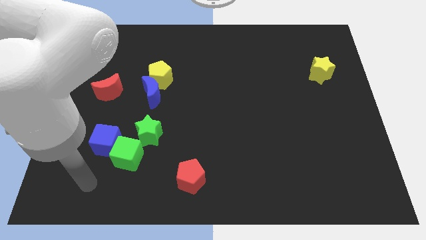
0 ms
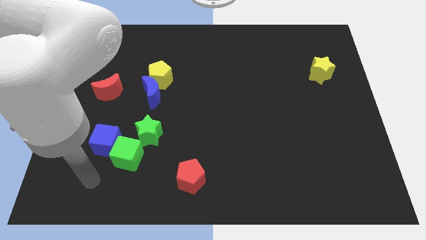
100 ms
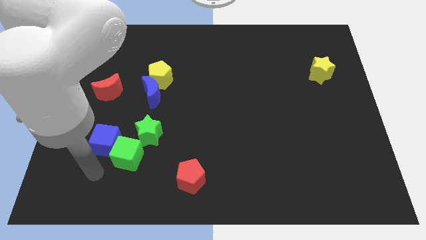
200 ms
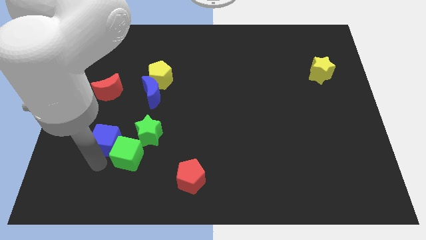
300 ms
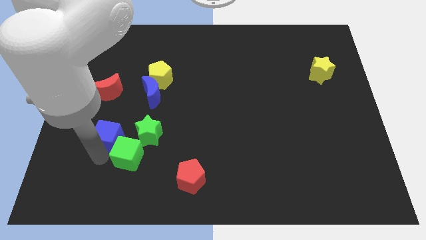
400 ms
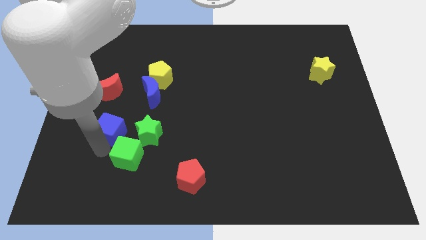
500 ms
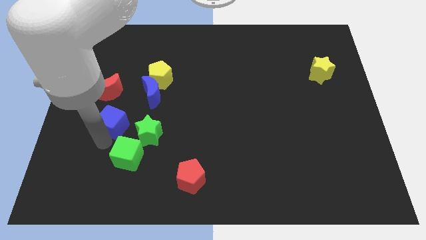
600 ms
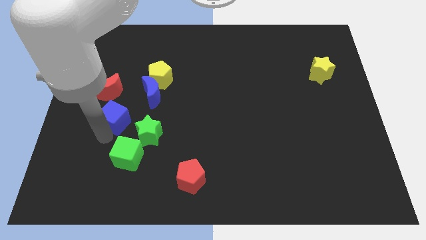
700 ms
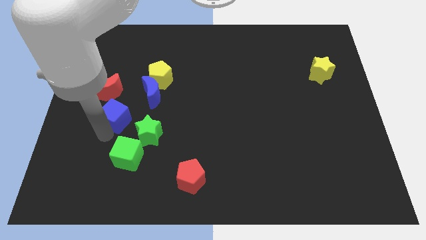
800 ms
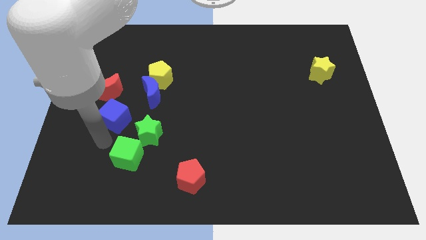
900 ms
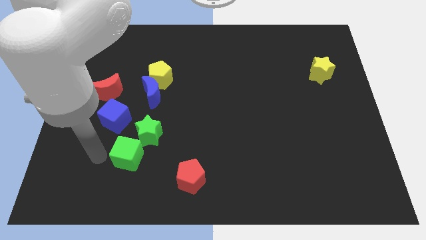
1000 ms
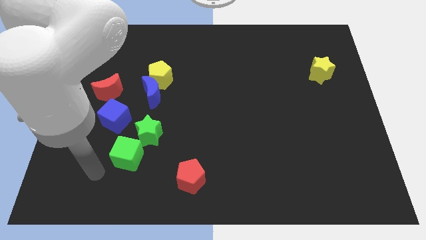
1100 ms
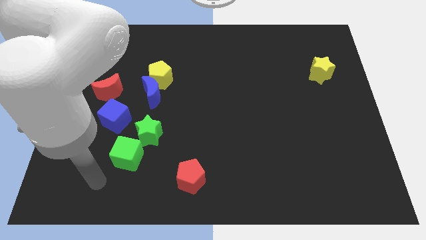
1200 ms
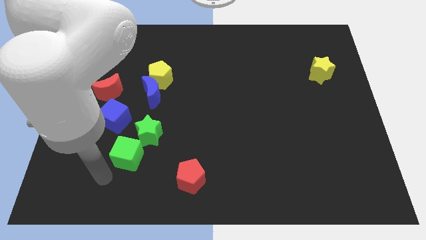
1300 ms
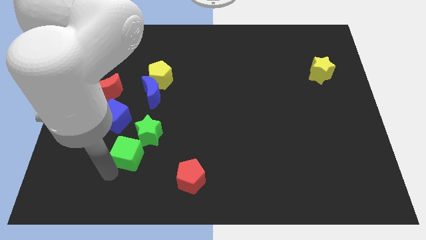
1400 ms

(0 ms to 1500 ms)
separate the blue cube from the green cube

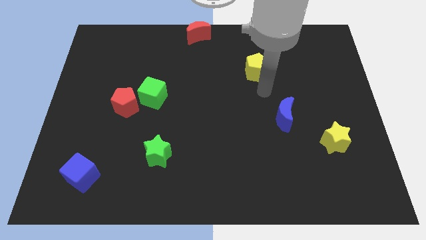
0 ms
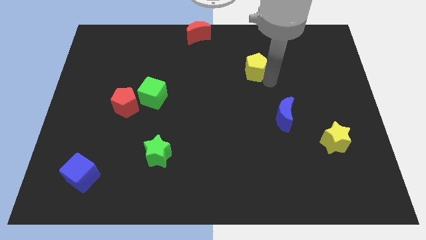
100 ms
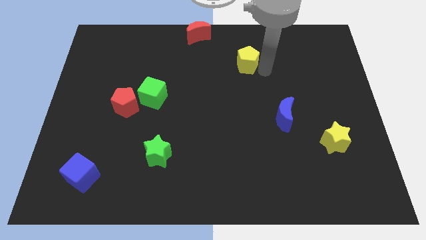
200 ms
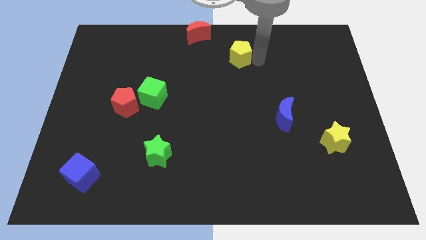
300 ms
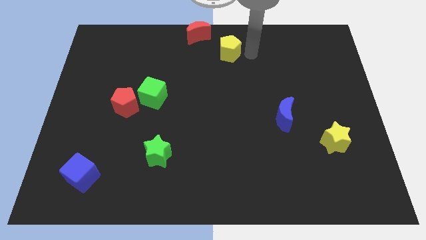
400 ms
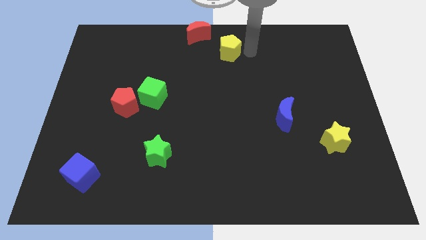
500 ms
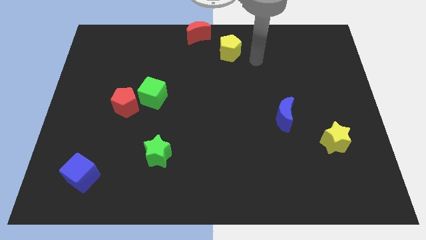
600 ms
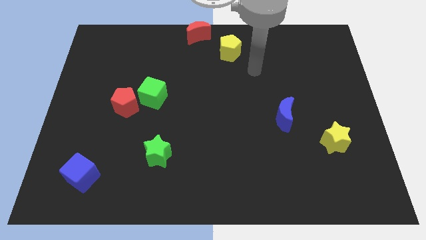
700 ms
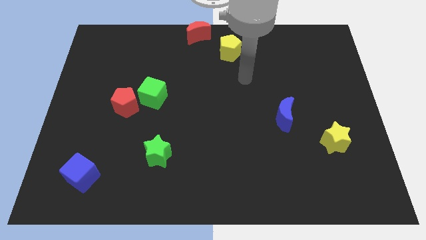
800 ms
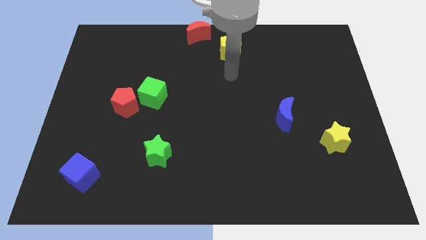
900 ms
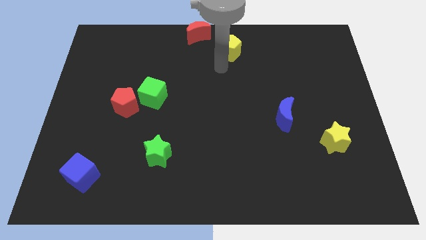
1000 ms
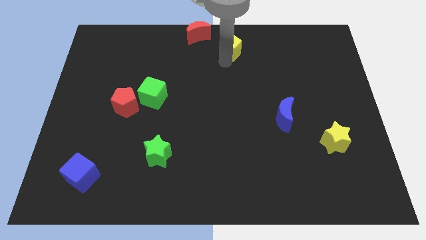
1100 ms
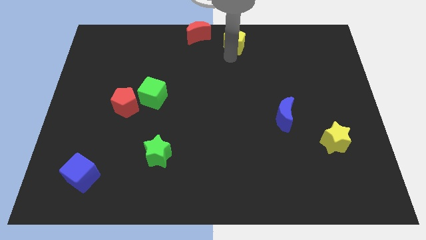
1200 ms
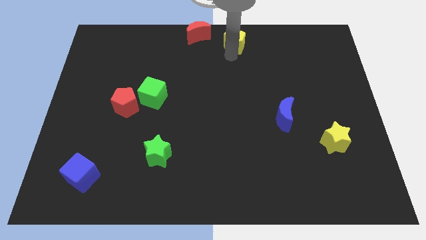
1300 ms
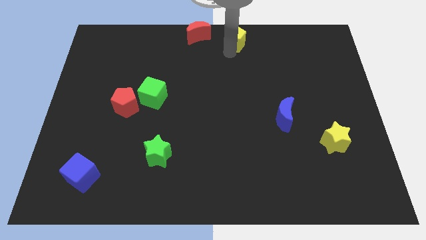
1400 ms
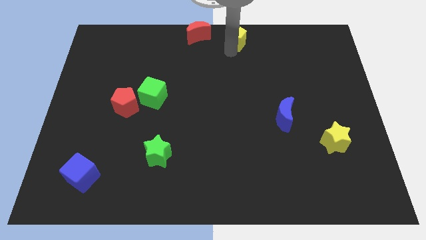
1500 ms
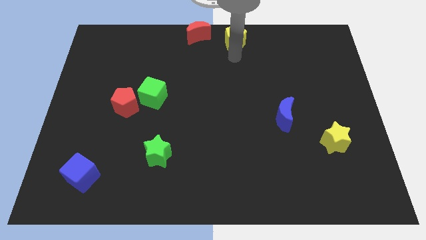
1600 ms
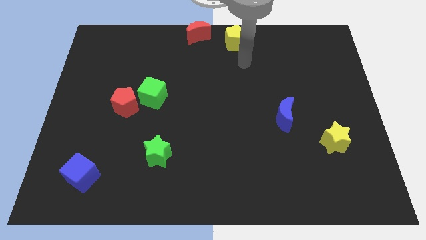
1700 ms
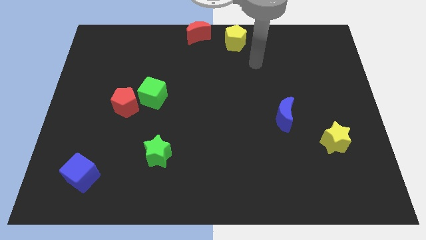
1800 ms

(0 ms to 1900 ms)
move yellow pentagon right to red crescent

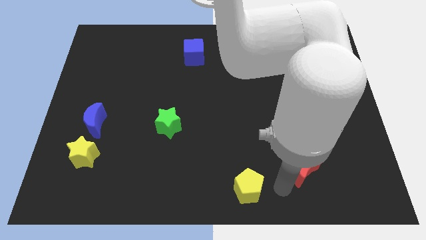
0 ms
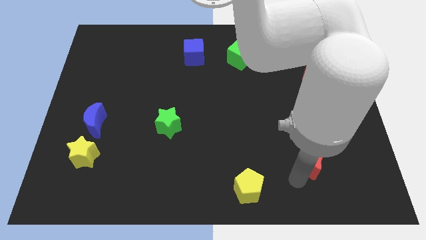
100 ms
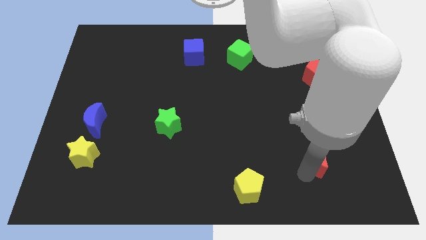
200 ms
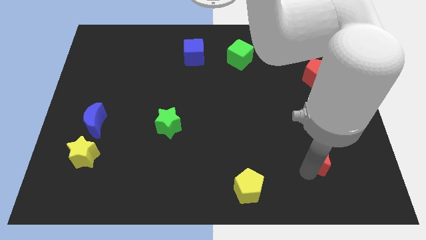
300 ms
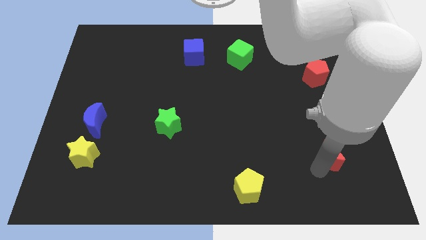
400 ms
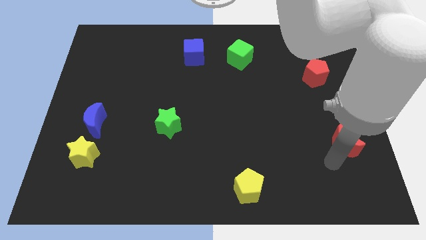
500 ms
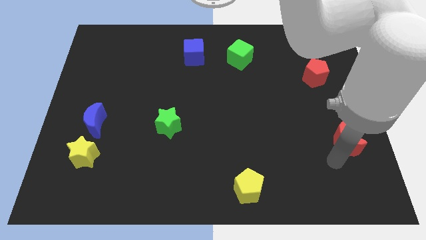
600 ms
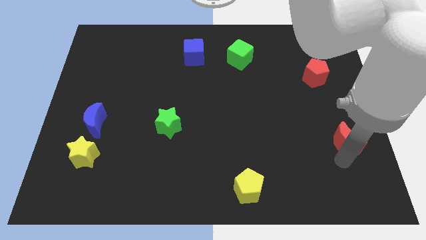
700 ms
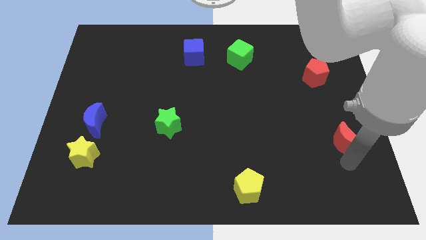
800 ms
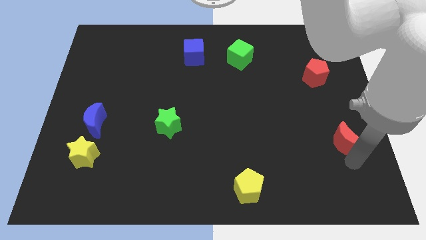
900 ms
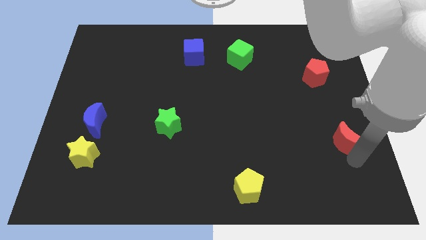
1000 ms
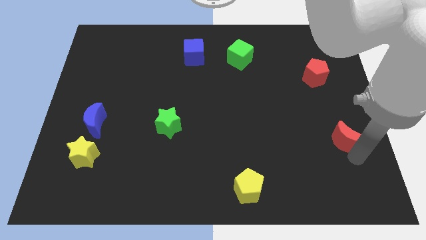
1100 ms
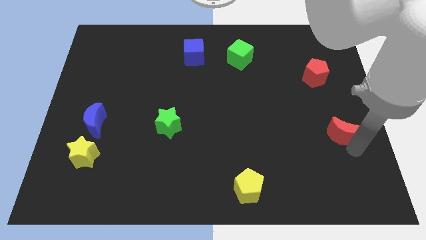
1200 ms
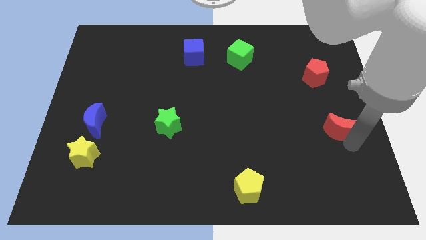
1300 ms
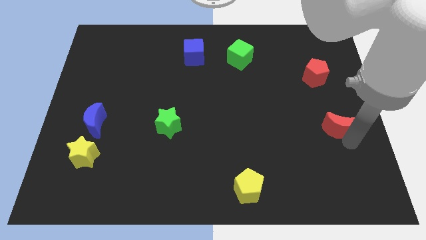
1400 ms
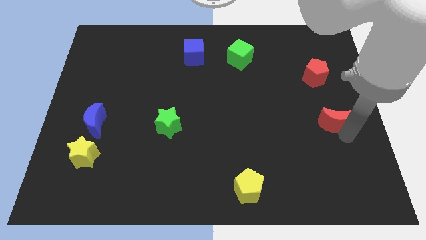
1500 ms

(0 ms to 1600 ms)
put the red moon horizontally to the right of the green star

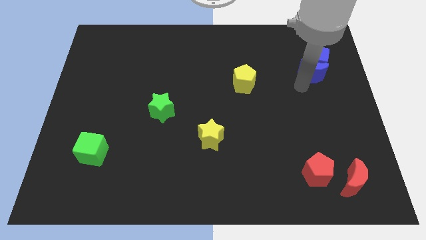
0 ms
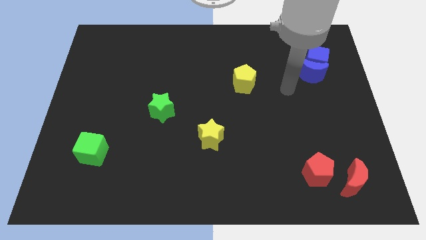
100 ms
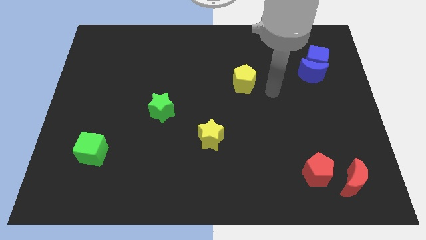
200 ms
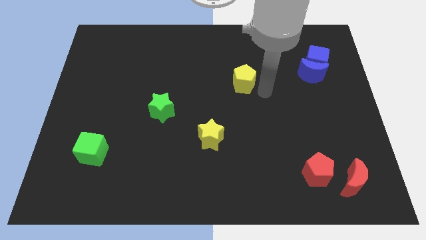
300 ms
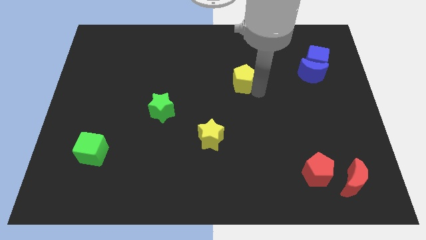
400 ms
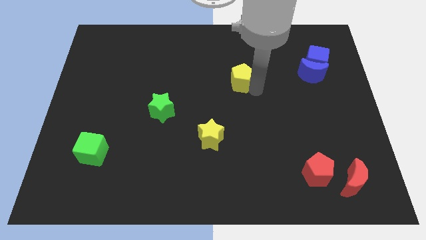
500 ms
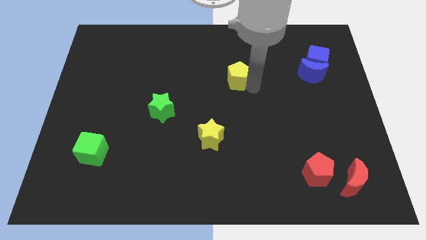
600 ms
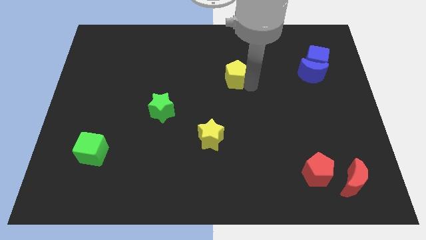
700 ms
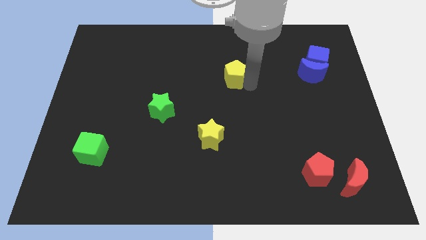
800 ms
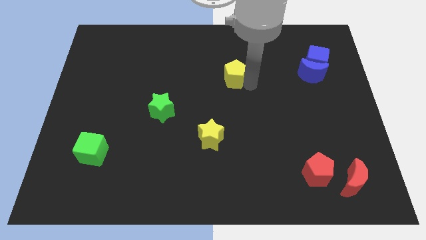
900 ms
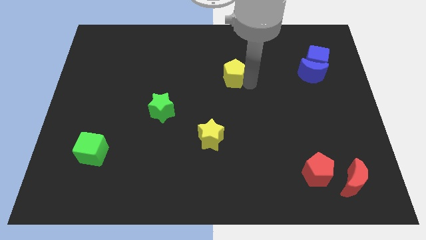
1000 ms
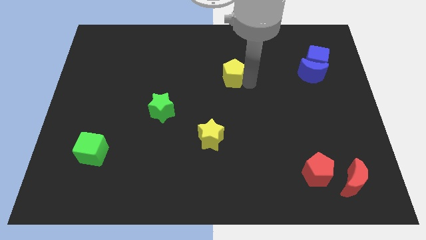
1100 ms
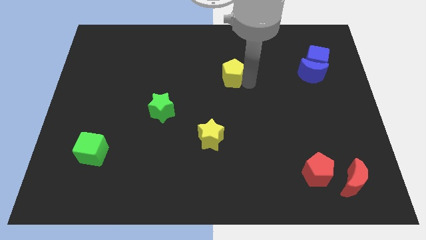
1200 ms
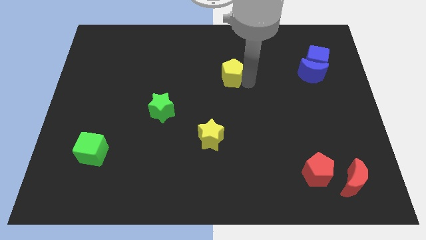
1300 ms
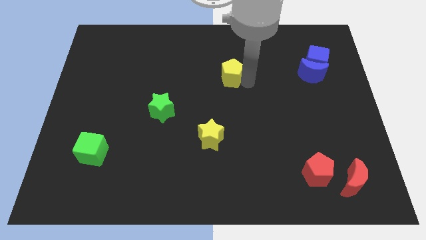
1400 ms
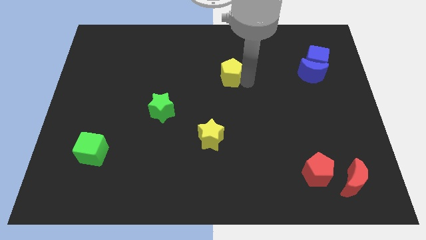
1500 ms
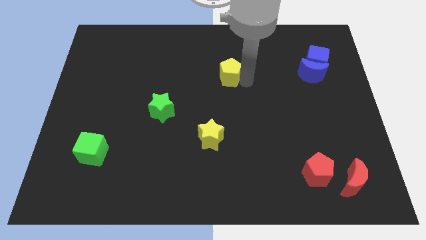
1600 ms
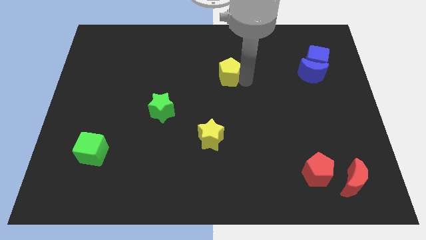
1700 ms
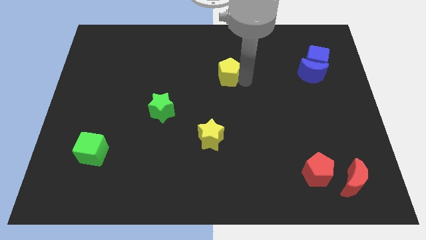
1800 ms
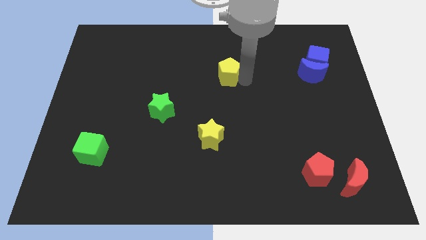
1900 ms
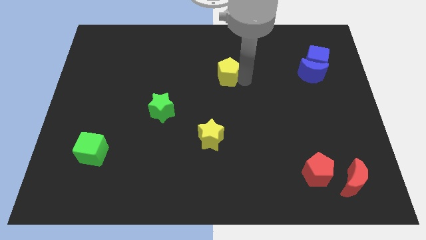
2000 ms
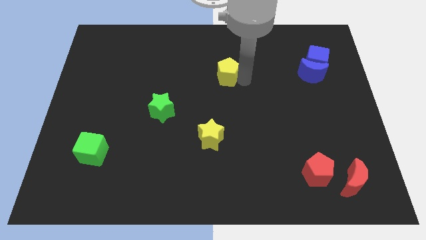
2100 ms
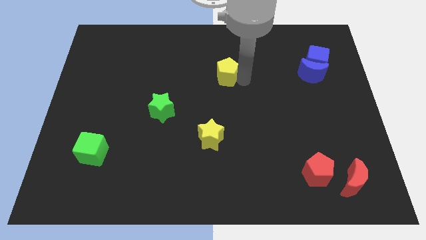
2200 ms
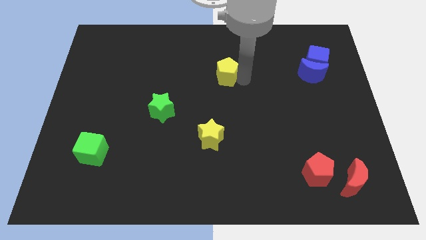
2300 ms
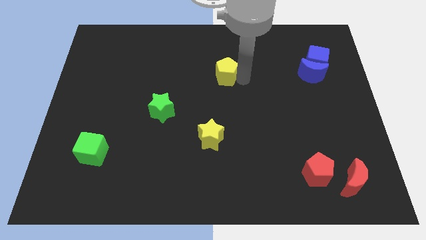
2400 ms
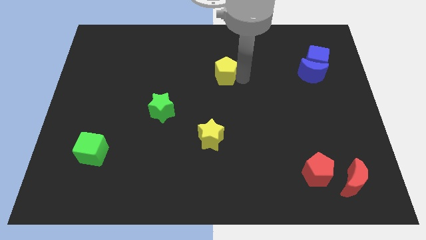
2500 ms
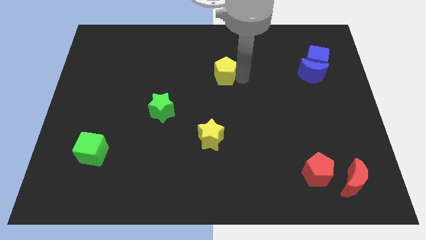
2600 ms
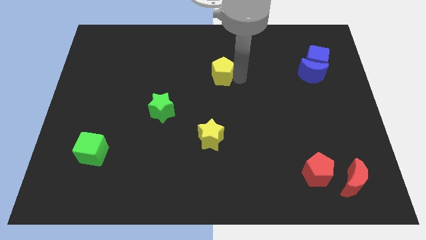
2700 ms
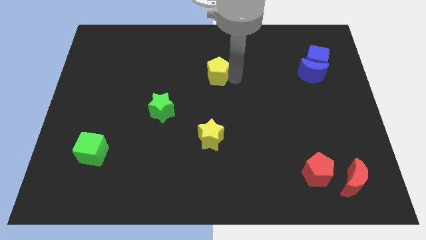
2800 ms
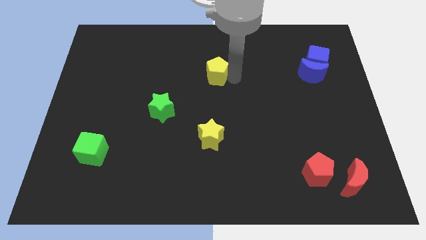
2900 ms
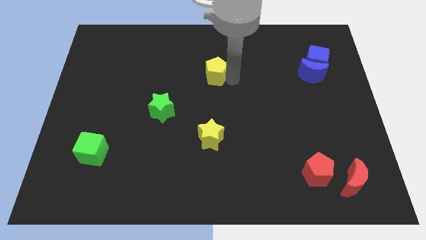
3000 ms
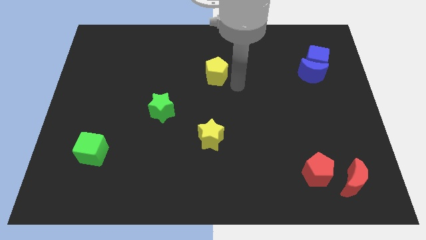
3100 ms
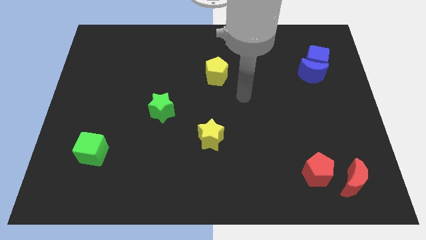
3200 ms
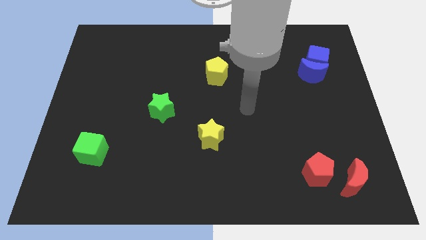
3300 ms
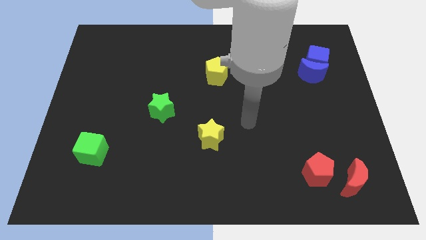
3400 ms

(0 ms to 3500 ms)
place the yellow pentagon above the yellow star

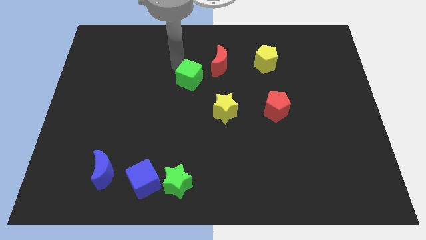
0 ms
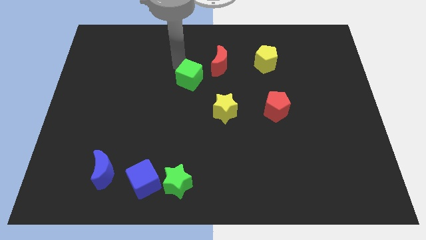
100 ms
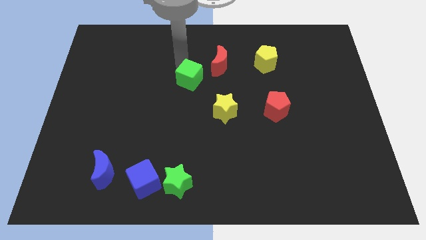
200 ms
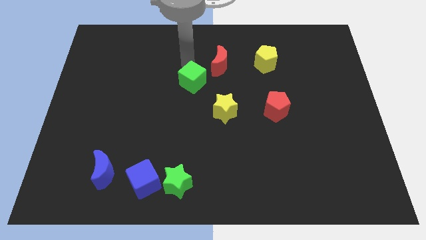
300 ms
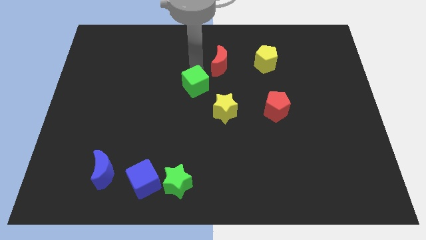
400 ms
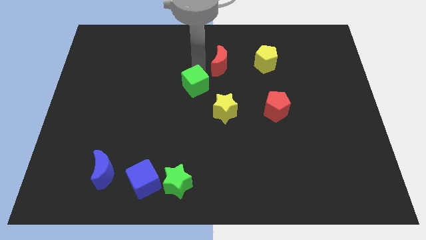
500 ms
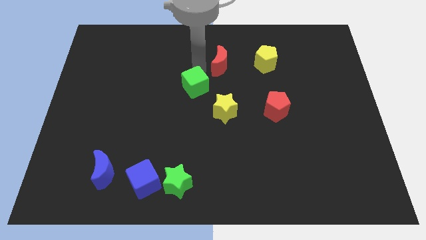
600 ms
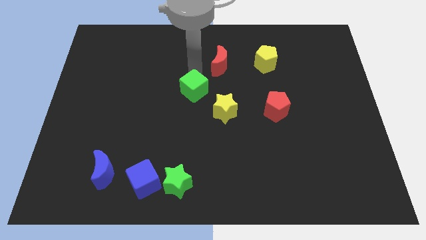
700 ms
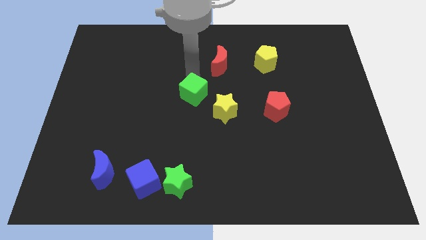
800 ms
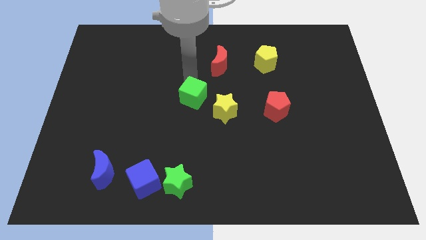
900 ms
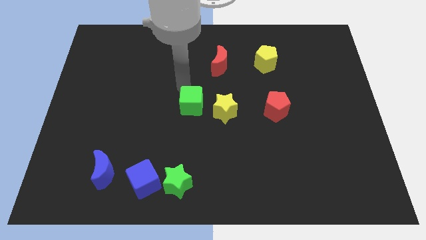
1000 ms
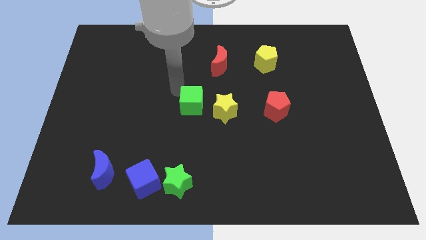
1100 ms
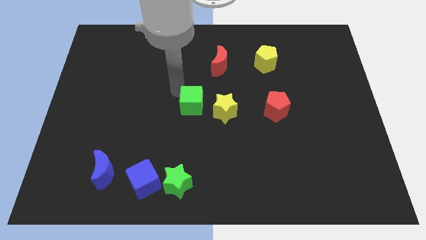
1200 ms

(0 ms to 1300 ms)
place the green cube in between the red moon and green star
